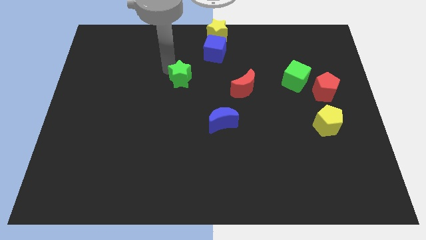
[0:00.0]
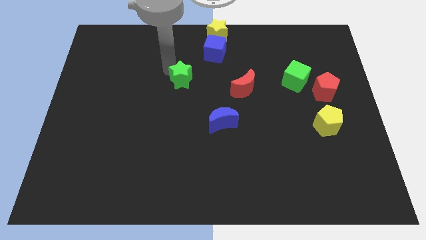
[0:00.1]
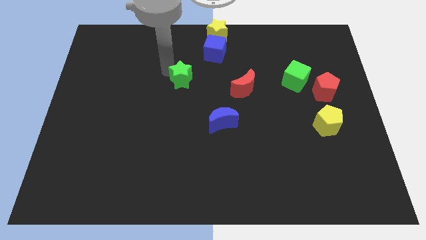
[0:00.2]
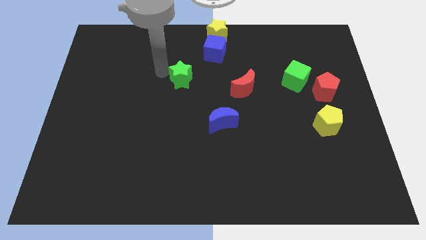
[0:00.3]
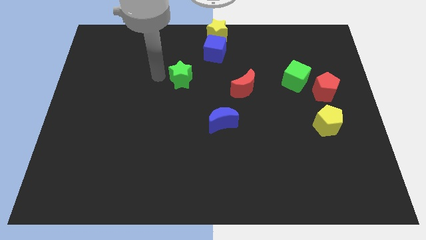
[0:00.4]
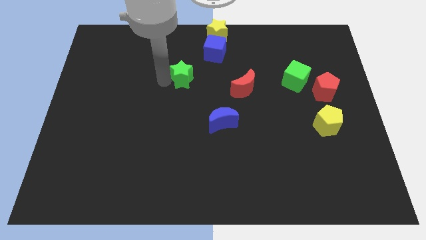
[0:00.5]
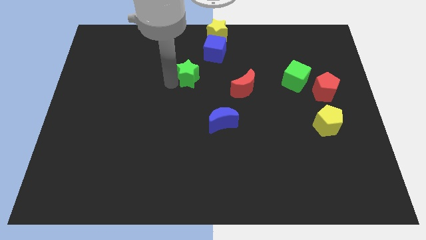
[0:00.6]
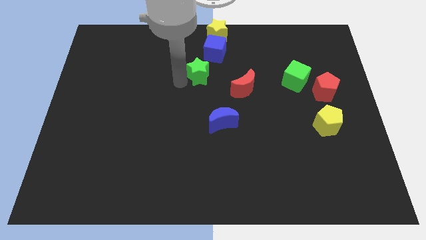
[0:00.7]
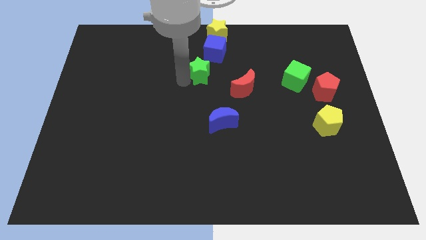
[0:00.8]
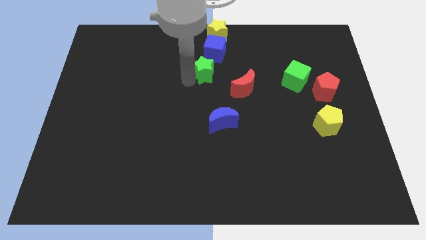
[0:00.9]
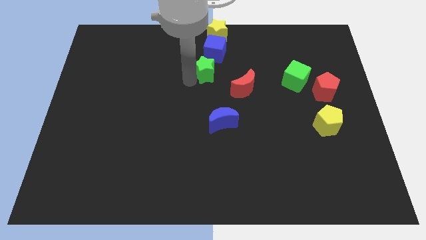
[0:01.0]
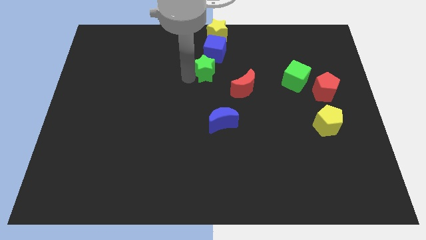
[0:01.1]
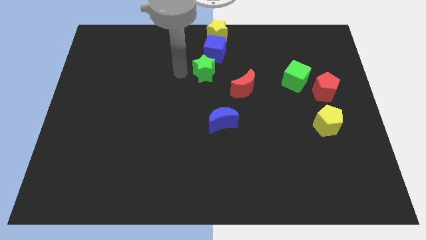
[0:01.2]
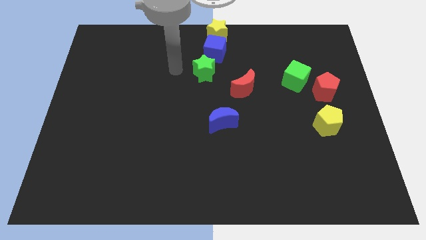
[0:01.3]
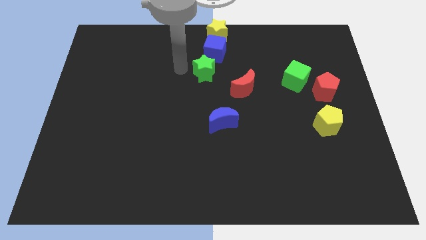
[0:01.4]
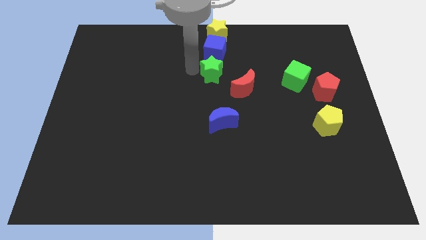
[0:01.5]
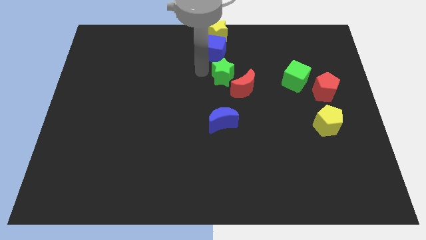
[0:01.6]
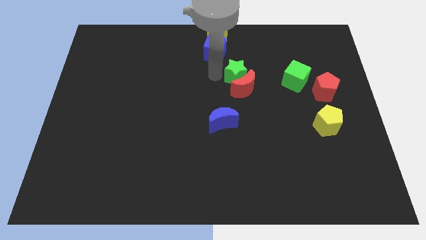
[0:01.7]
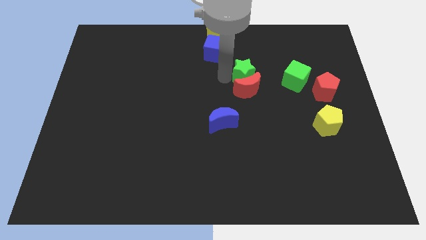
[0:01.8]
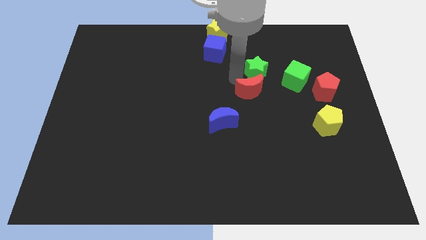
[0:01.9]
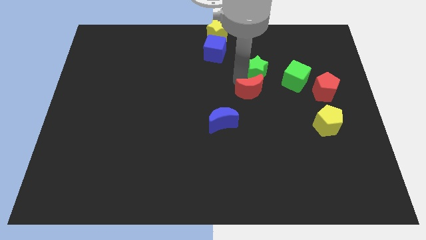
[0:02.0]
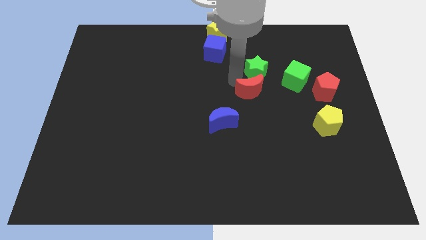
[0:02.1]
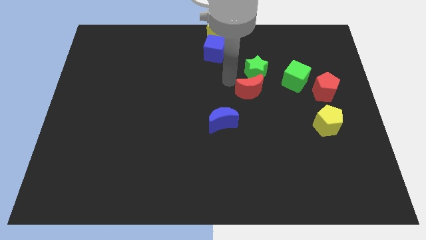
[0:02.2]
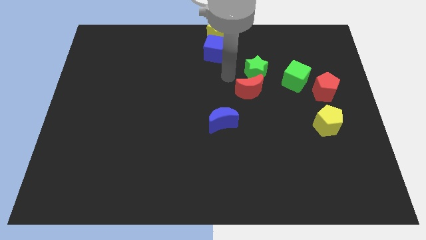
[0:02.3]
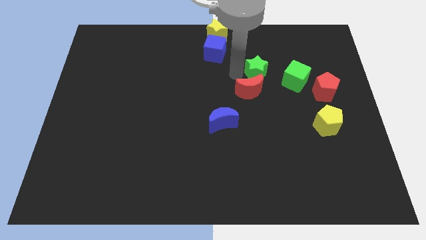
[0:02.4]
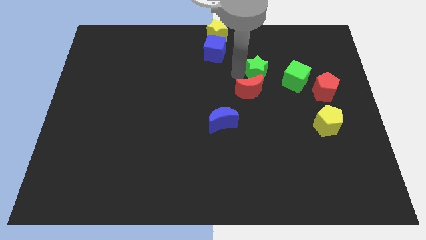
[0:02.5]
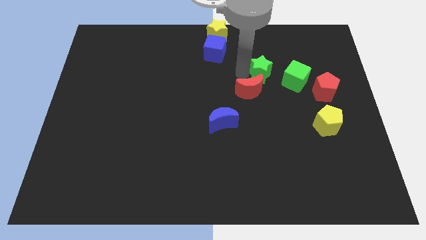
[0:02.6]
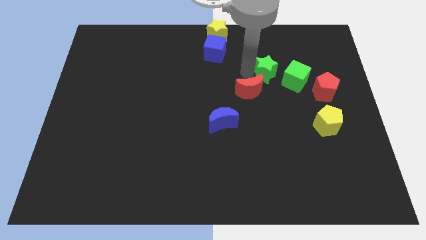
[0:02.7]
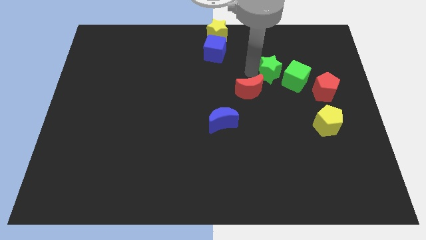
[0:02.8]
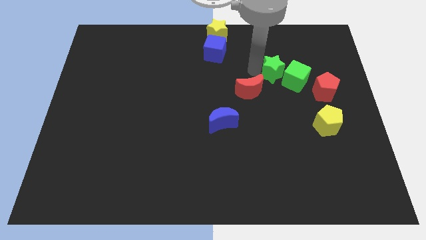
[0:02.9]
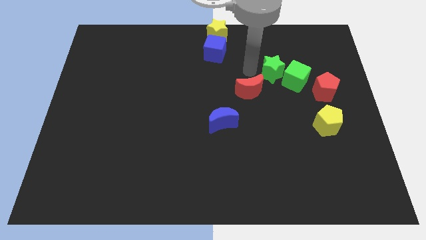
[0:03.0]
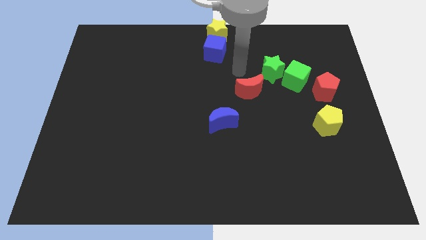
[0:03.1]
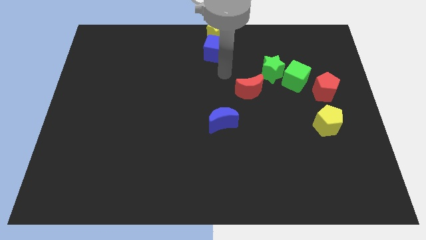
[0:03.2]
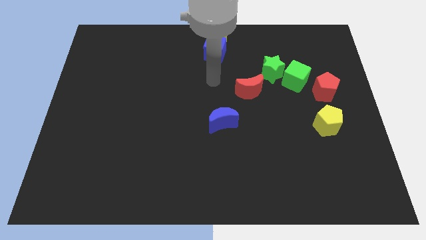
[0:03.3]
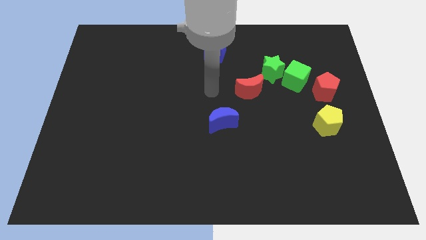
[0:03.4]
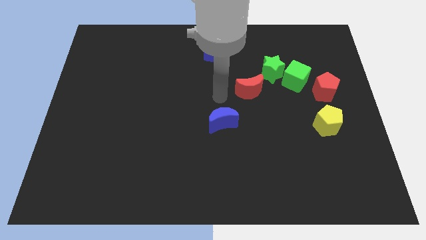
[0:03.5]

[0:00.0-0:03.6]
slide the green star close to the green cube

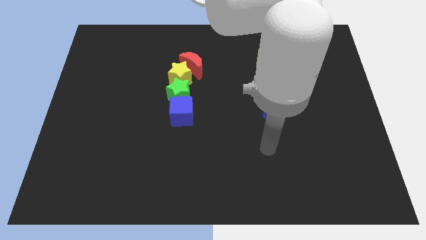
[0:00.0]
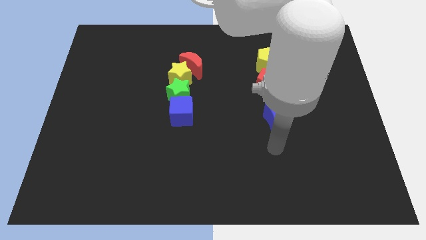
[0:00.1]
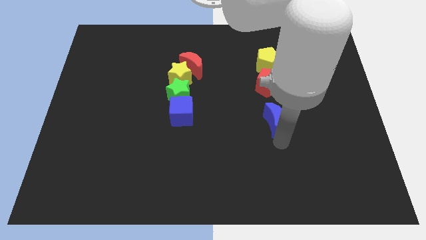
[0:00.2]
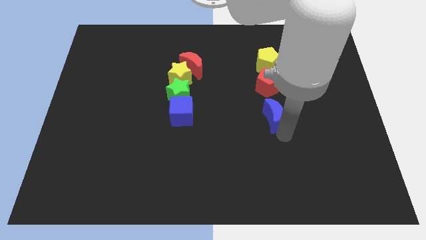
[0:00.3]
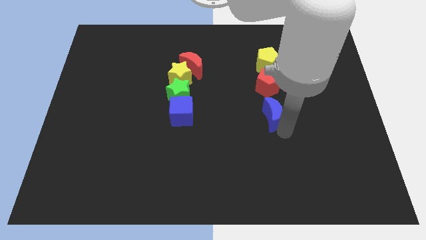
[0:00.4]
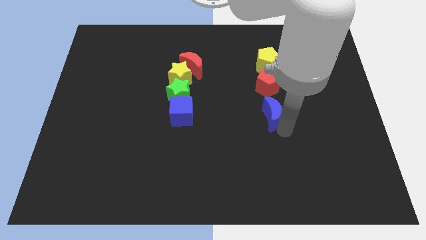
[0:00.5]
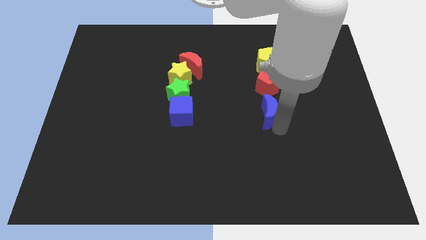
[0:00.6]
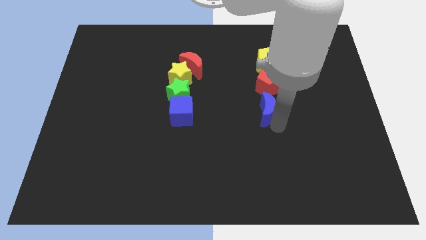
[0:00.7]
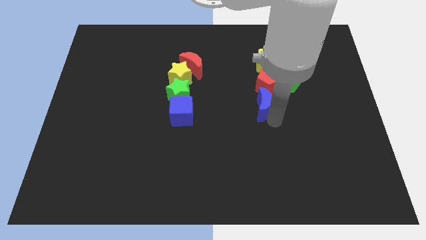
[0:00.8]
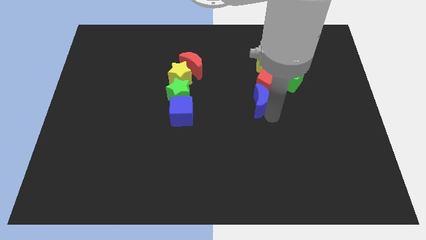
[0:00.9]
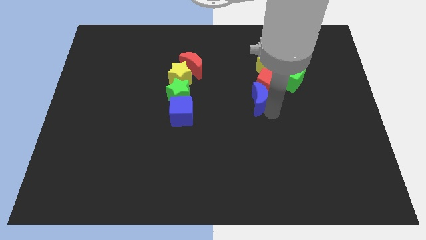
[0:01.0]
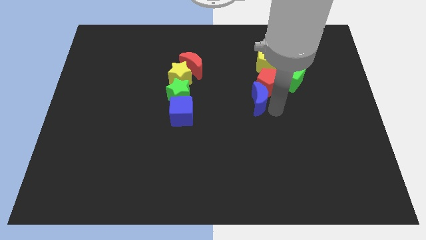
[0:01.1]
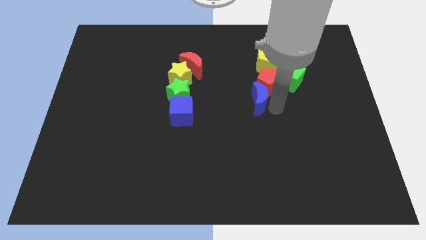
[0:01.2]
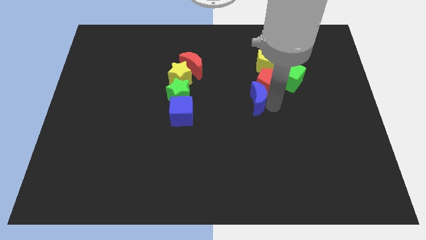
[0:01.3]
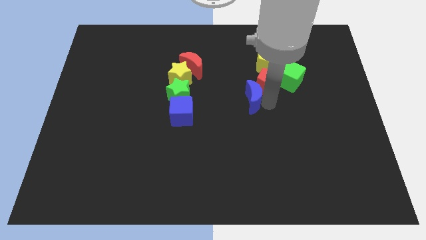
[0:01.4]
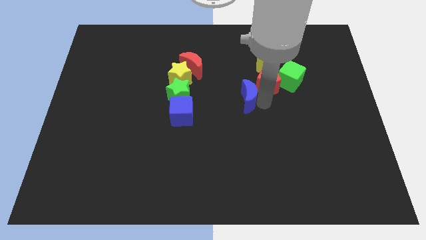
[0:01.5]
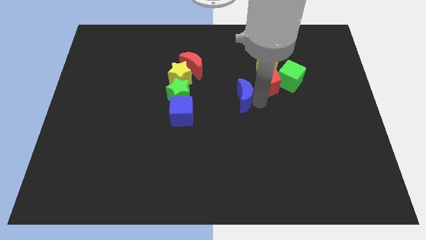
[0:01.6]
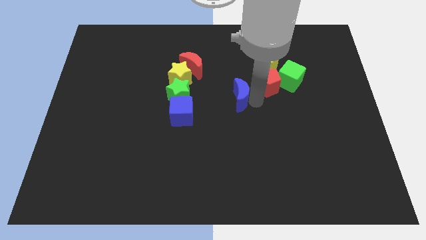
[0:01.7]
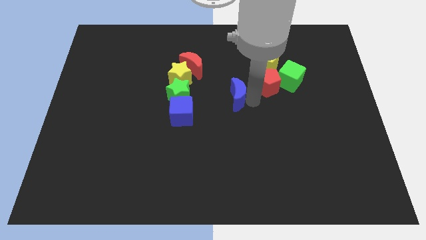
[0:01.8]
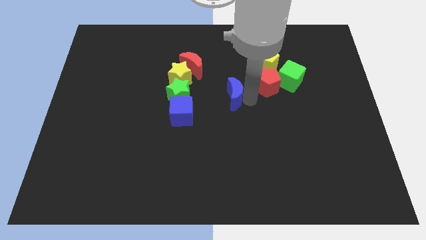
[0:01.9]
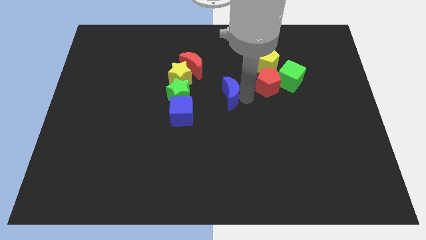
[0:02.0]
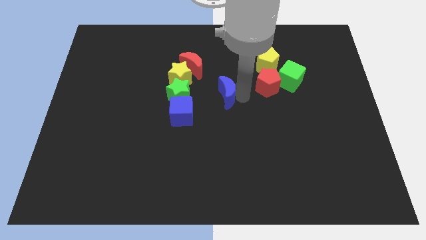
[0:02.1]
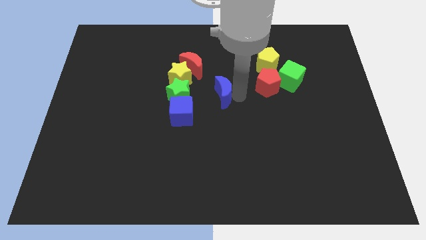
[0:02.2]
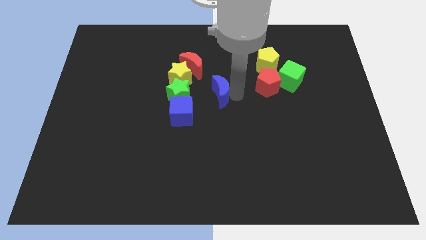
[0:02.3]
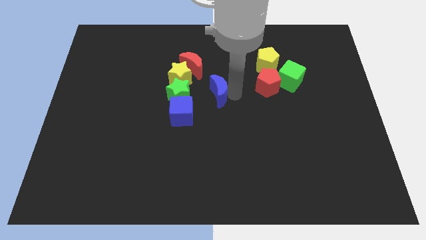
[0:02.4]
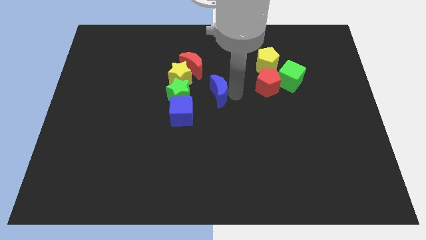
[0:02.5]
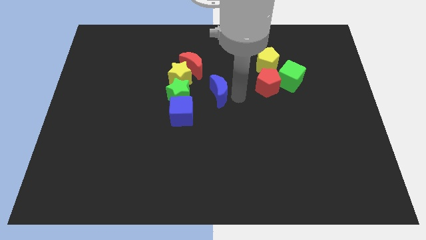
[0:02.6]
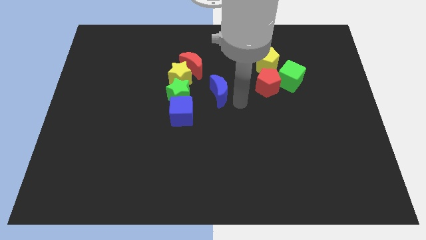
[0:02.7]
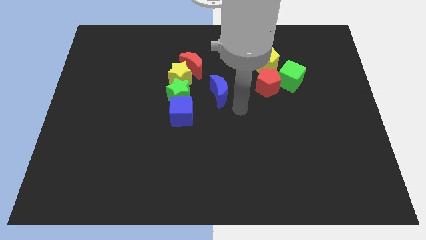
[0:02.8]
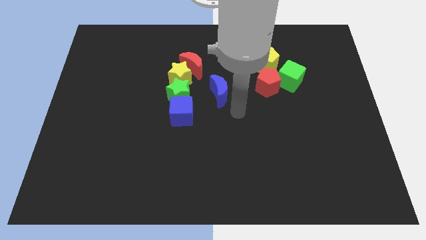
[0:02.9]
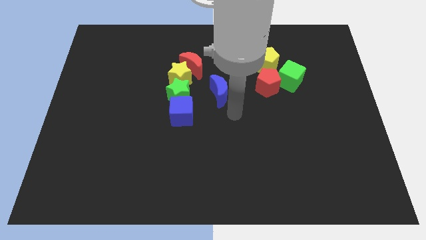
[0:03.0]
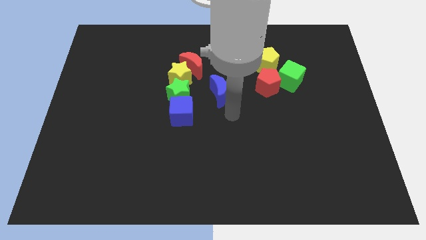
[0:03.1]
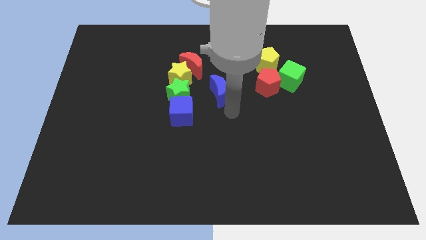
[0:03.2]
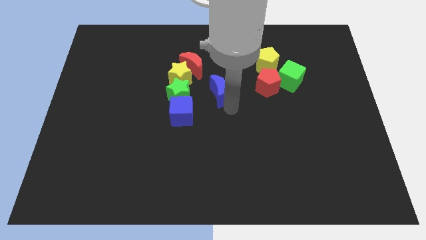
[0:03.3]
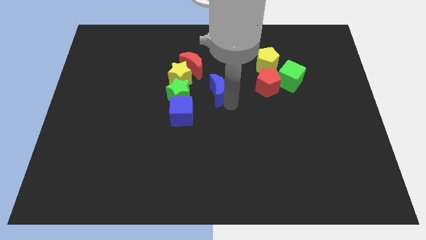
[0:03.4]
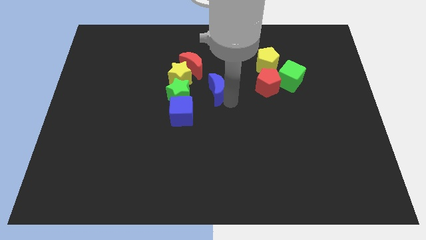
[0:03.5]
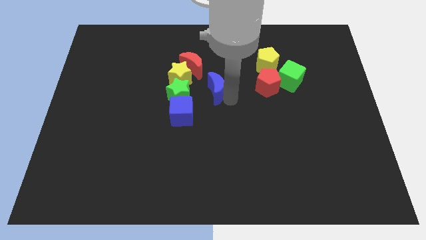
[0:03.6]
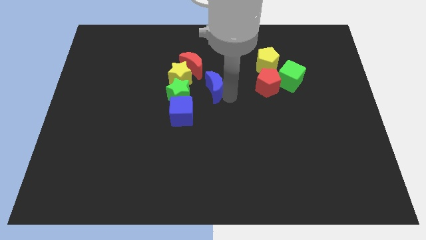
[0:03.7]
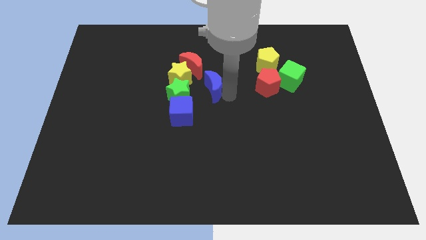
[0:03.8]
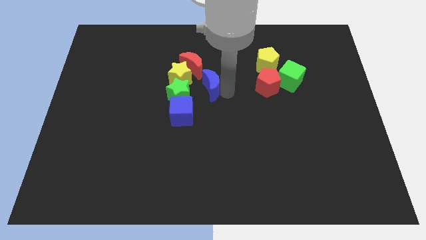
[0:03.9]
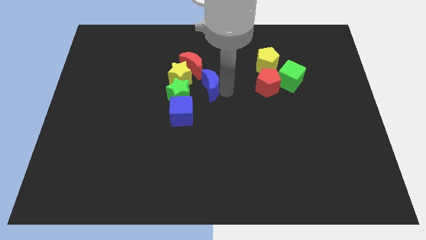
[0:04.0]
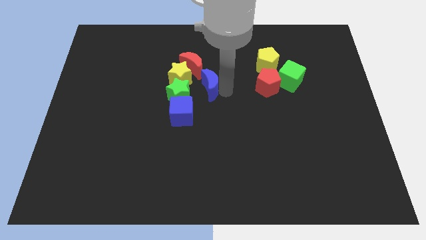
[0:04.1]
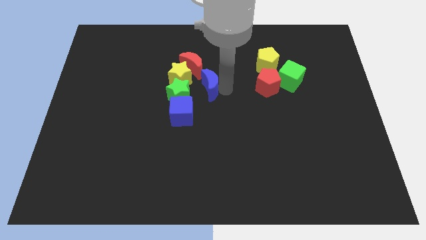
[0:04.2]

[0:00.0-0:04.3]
move the blue crescent towards the right bottom of the red crescent

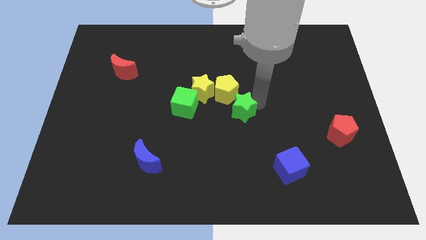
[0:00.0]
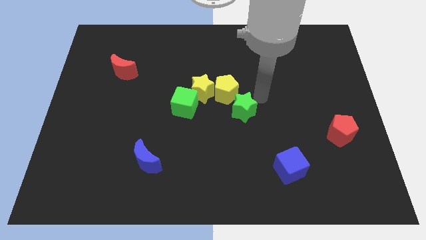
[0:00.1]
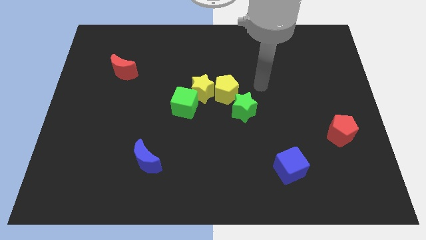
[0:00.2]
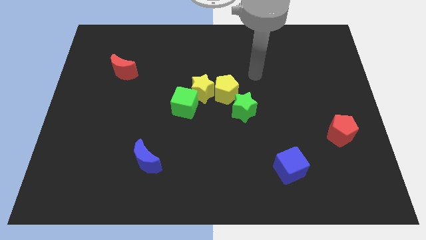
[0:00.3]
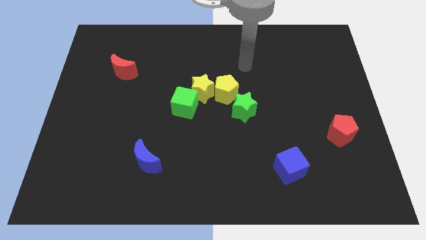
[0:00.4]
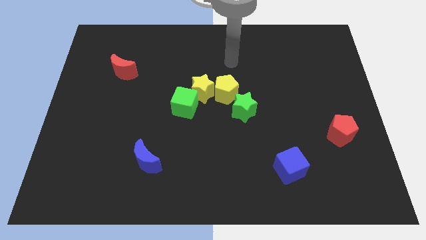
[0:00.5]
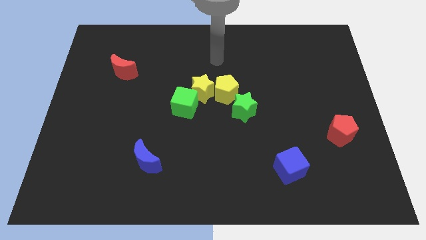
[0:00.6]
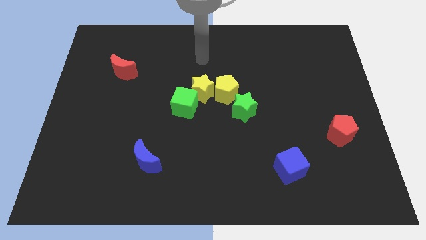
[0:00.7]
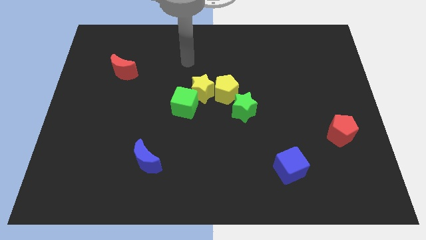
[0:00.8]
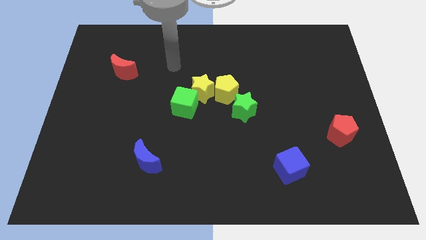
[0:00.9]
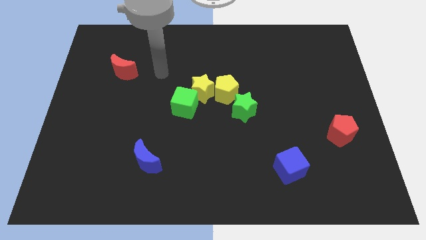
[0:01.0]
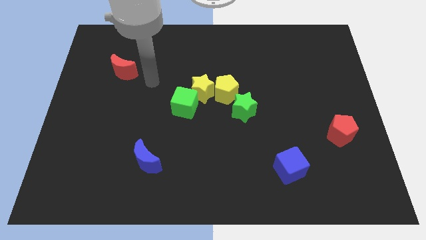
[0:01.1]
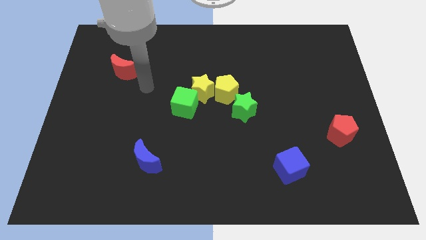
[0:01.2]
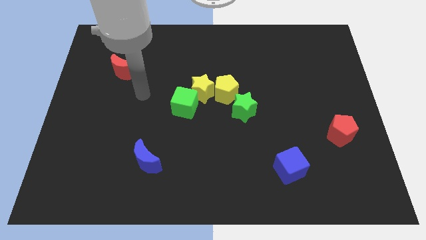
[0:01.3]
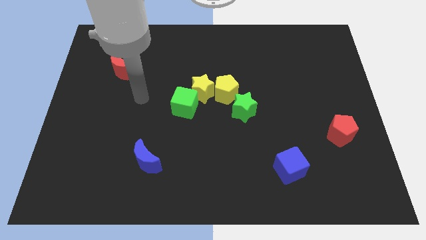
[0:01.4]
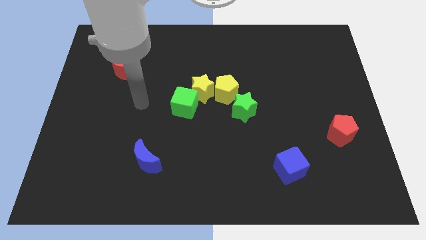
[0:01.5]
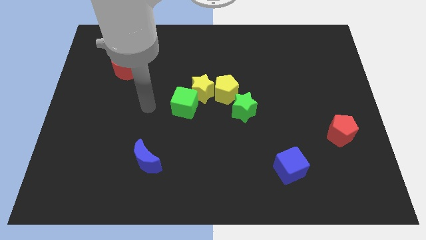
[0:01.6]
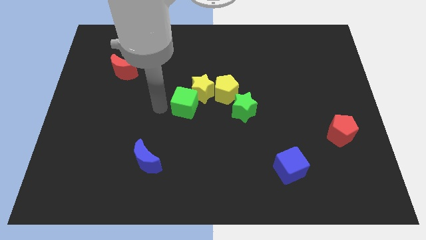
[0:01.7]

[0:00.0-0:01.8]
move arm towards the green cube
